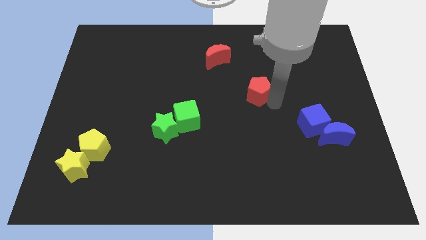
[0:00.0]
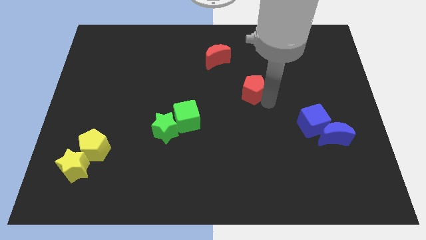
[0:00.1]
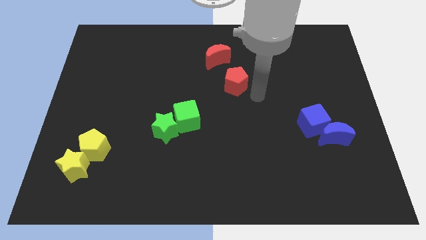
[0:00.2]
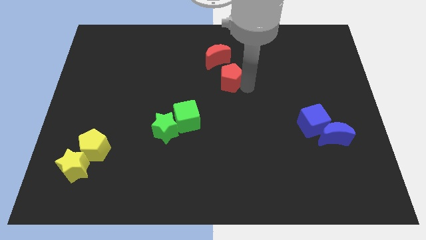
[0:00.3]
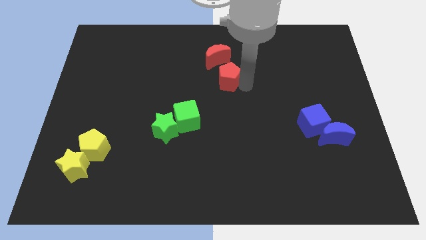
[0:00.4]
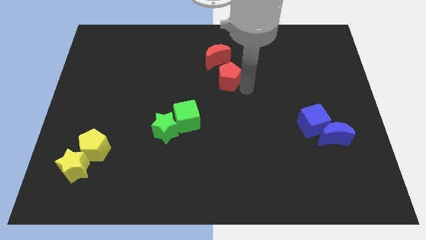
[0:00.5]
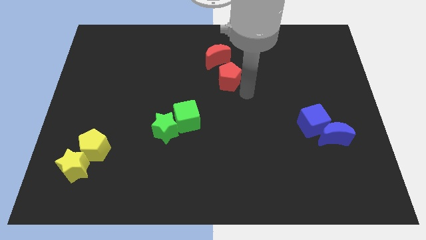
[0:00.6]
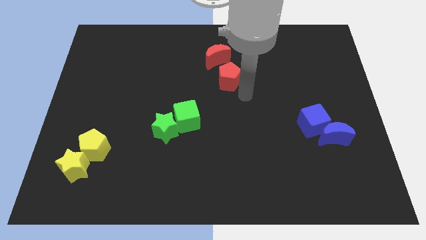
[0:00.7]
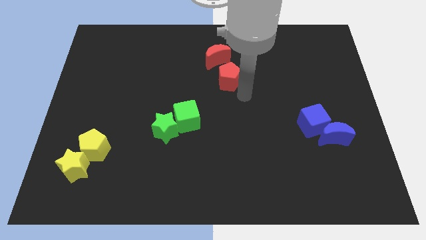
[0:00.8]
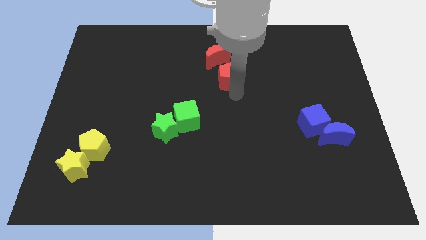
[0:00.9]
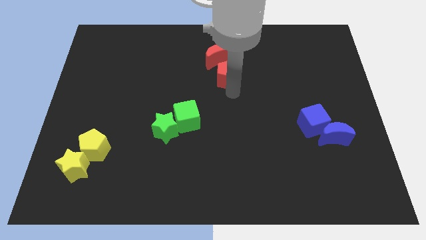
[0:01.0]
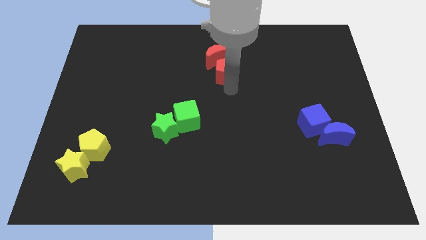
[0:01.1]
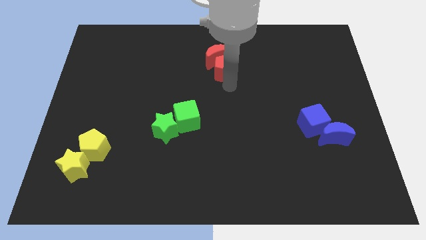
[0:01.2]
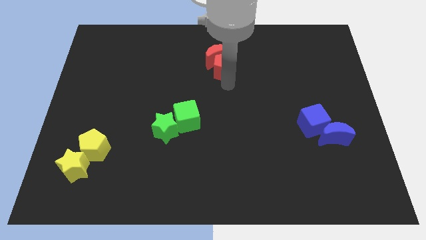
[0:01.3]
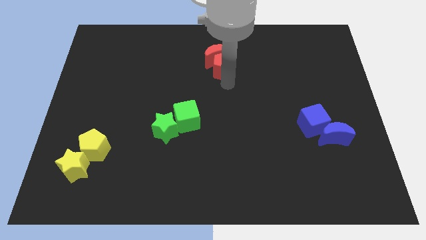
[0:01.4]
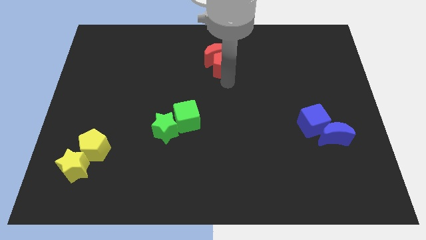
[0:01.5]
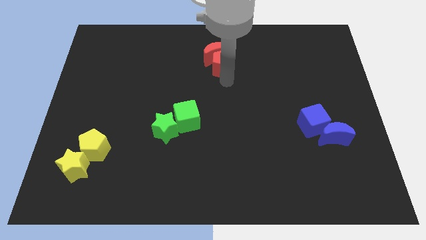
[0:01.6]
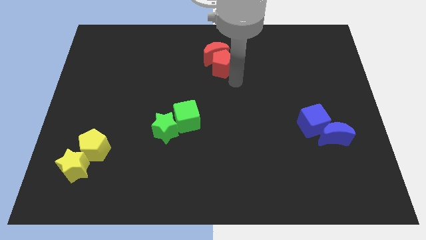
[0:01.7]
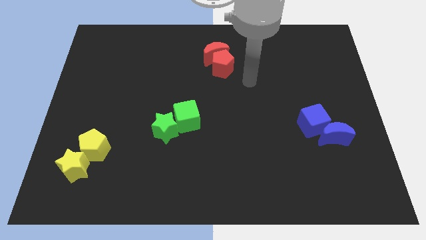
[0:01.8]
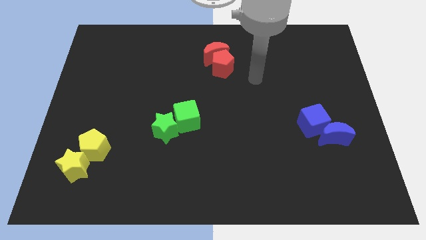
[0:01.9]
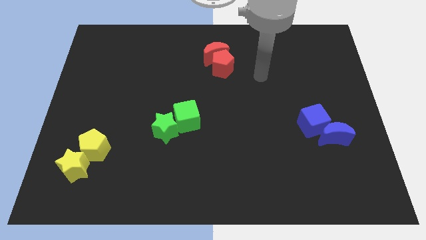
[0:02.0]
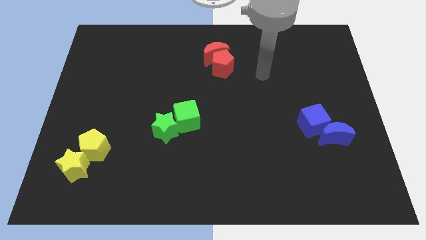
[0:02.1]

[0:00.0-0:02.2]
move your arm away from the red pentagon

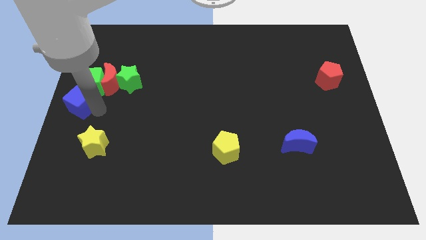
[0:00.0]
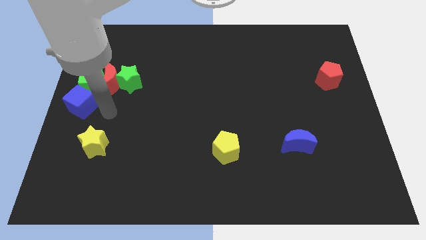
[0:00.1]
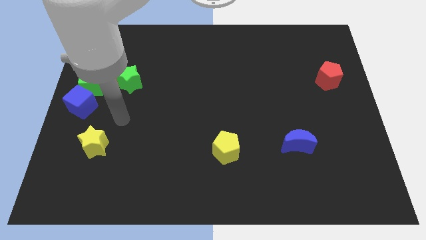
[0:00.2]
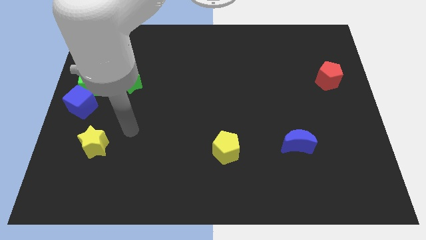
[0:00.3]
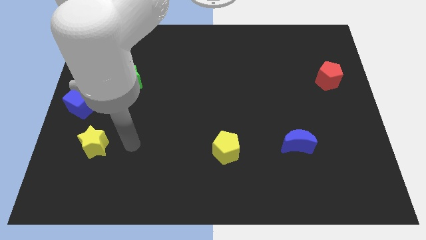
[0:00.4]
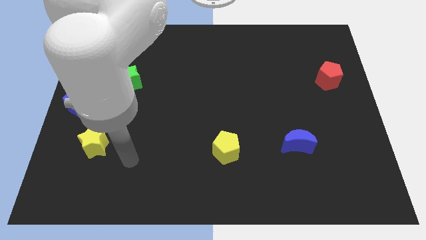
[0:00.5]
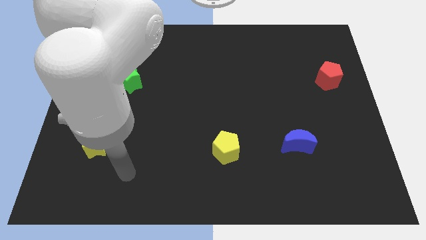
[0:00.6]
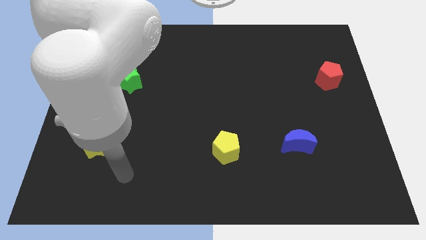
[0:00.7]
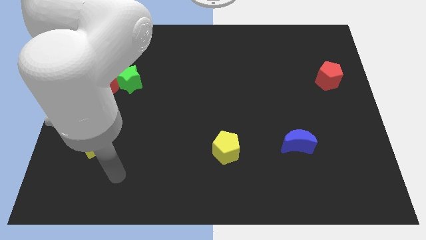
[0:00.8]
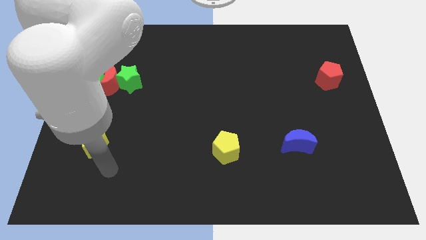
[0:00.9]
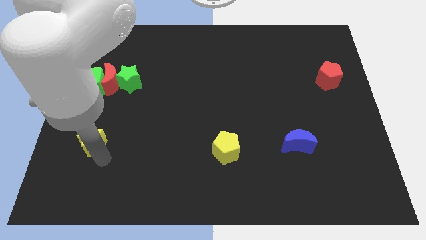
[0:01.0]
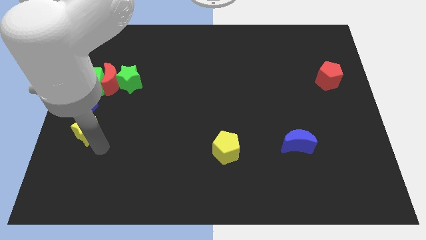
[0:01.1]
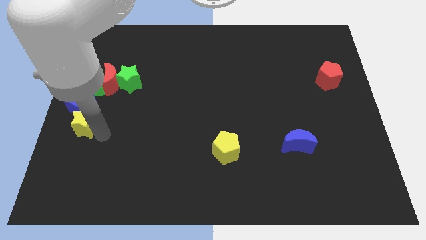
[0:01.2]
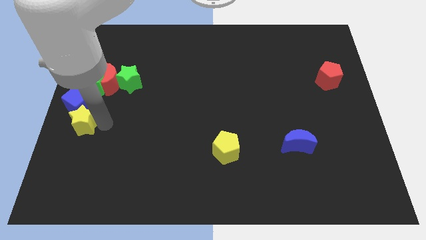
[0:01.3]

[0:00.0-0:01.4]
place the yellow star down to the blue cube

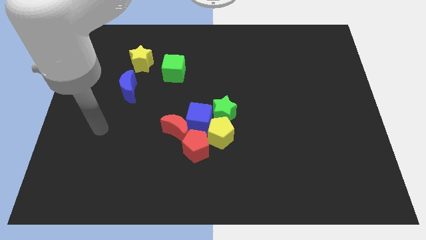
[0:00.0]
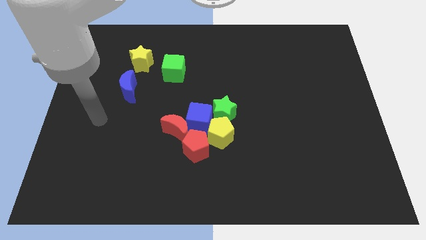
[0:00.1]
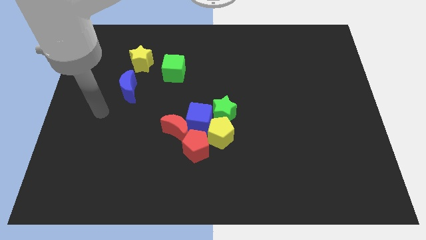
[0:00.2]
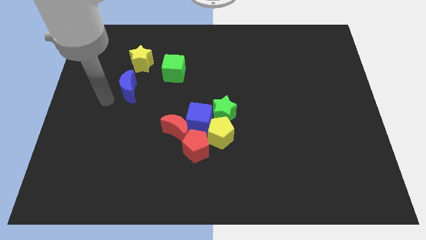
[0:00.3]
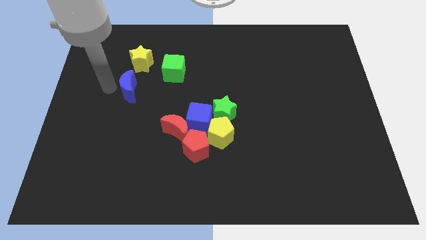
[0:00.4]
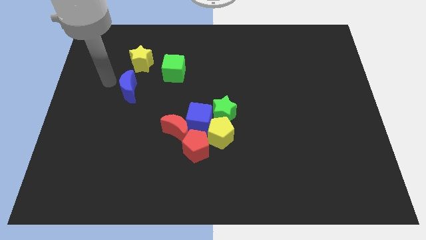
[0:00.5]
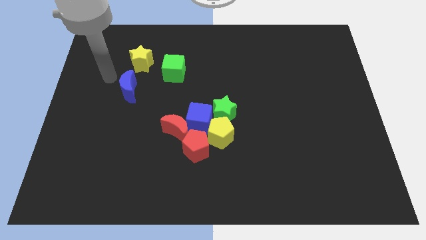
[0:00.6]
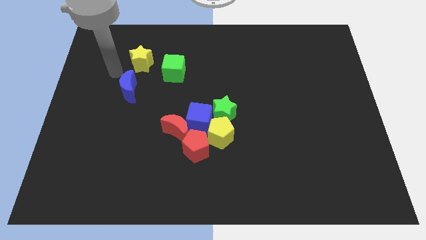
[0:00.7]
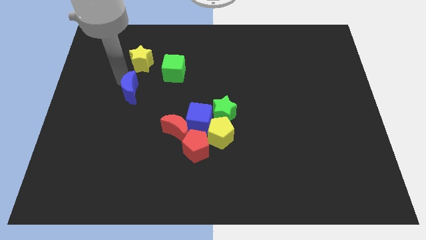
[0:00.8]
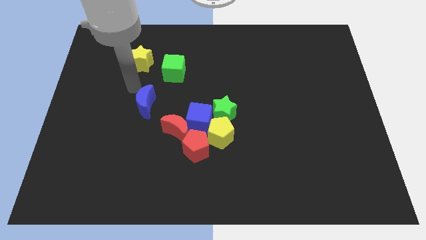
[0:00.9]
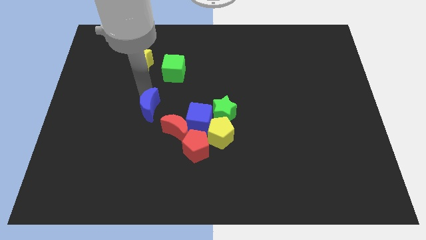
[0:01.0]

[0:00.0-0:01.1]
move the blue moon towards the red moon

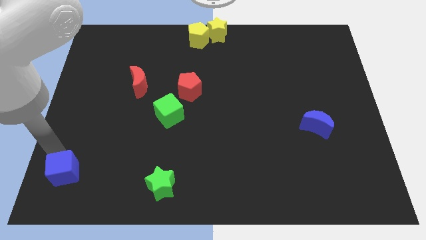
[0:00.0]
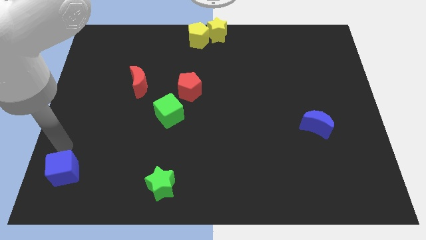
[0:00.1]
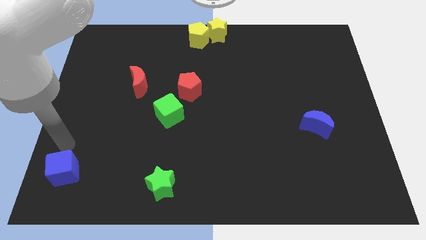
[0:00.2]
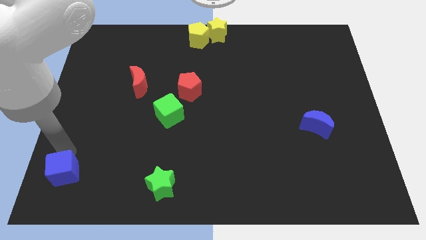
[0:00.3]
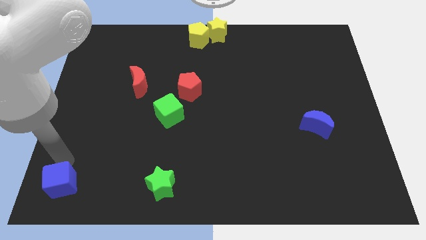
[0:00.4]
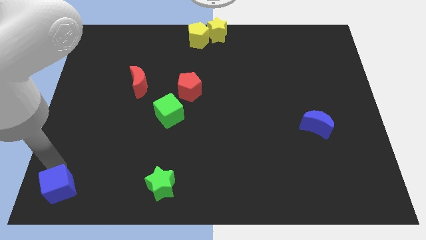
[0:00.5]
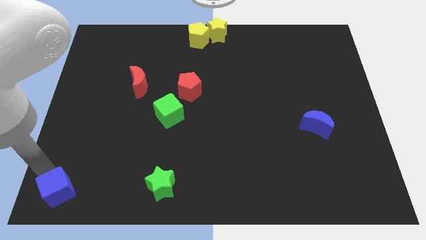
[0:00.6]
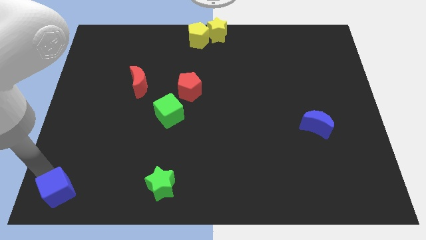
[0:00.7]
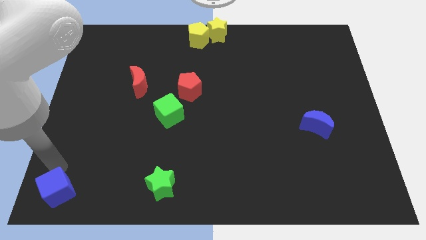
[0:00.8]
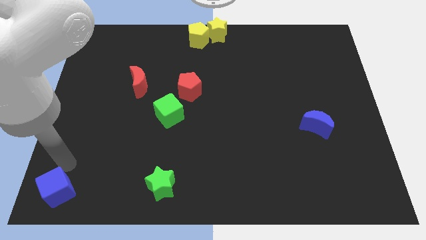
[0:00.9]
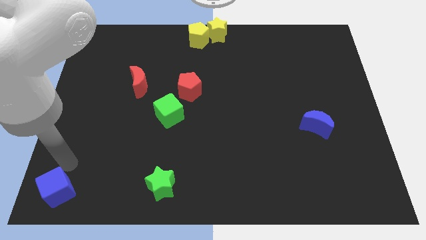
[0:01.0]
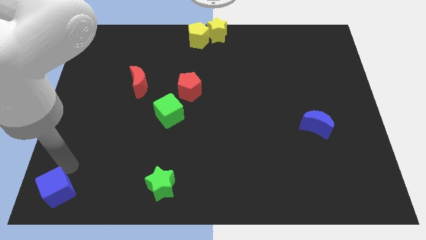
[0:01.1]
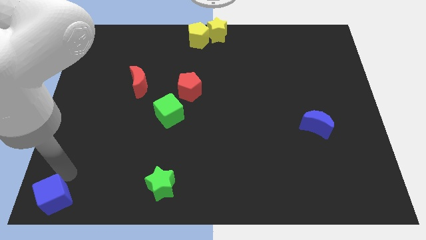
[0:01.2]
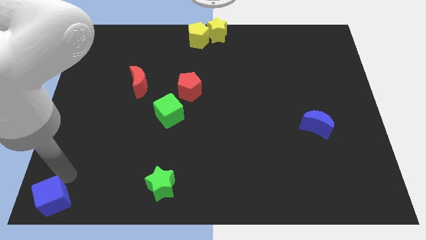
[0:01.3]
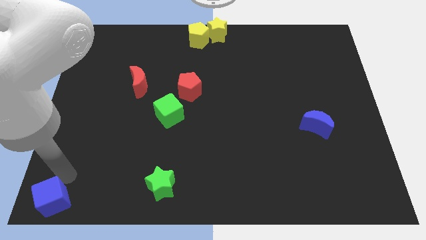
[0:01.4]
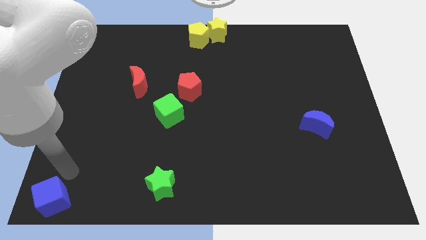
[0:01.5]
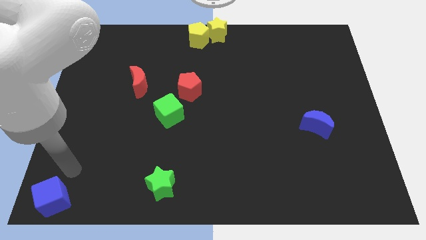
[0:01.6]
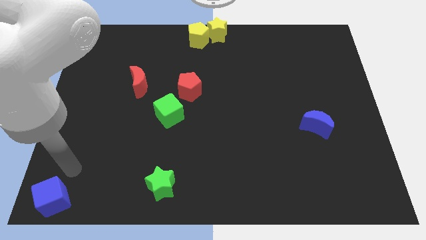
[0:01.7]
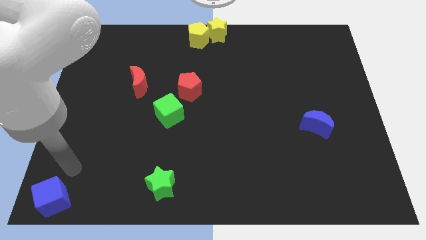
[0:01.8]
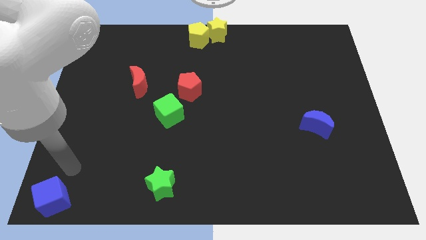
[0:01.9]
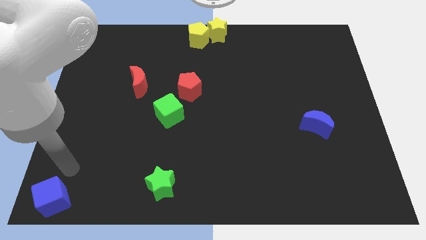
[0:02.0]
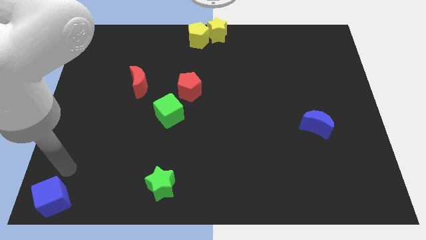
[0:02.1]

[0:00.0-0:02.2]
place the blue cube to the bottom left corner

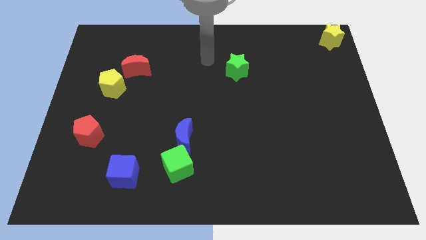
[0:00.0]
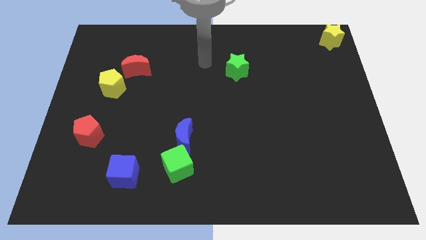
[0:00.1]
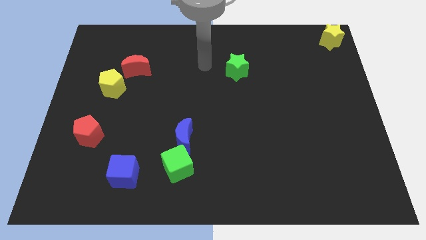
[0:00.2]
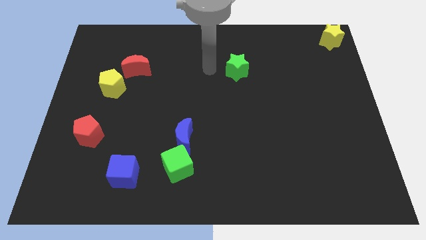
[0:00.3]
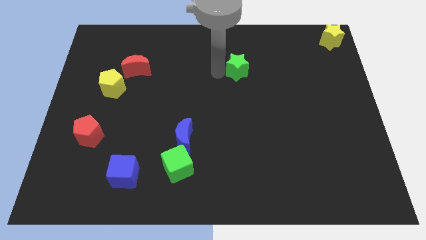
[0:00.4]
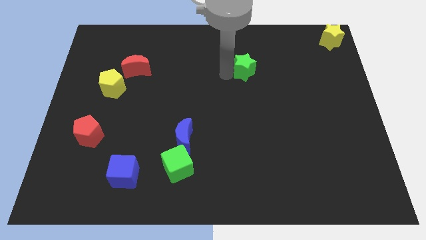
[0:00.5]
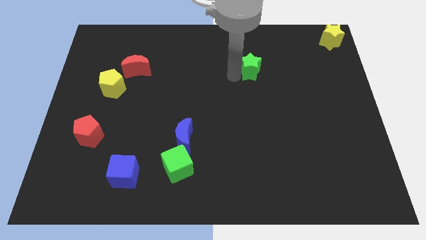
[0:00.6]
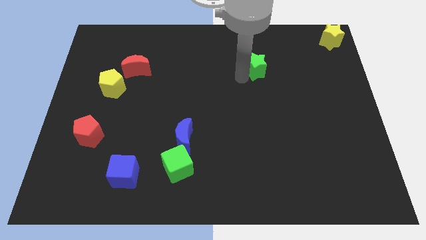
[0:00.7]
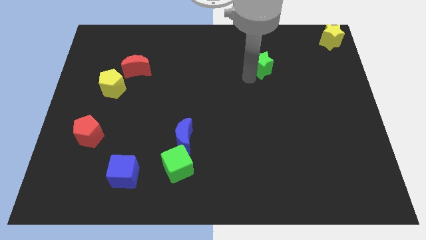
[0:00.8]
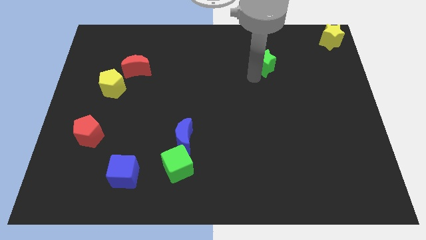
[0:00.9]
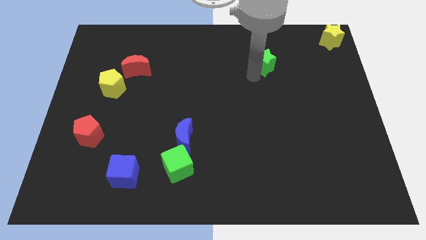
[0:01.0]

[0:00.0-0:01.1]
move green star slightly right

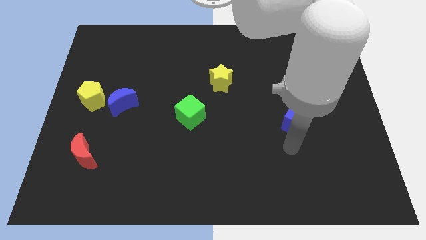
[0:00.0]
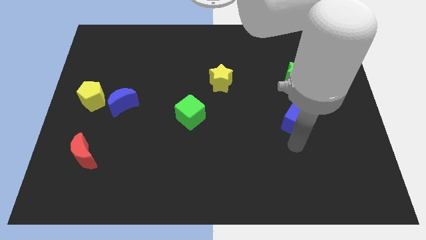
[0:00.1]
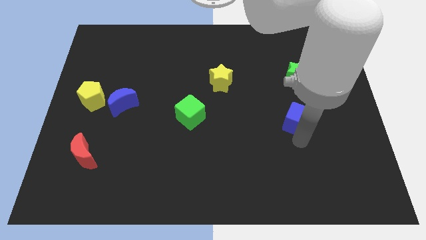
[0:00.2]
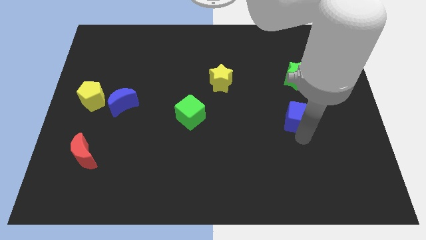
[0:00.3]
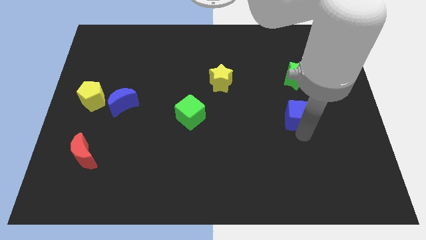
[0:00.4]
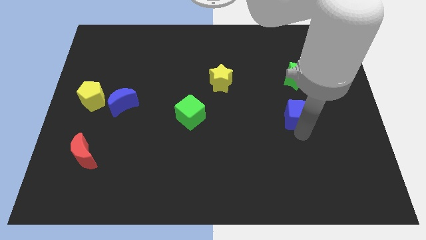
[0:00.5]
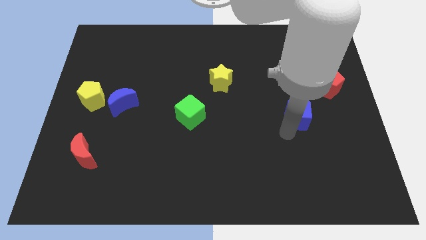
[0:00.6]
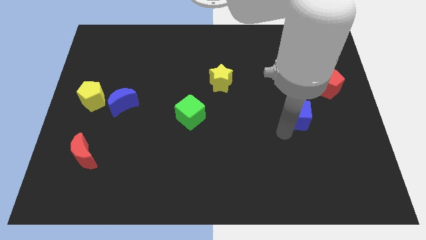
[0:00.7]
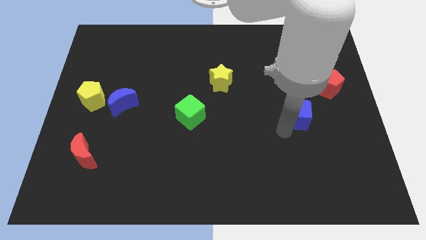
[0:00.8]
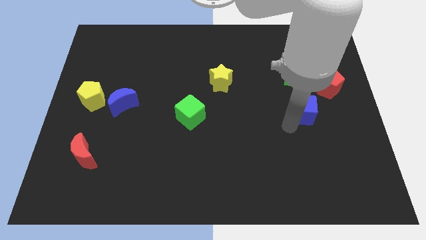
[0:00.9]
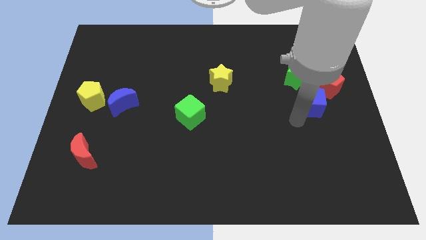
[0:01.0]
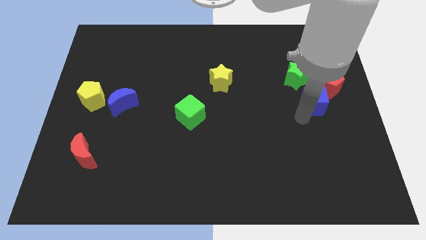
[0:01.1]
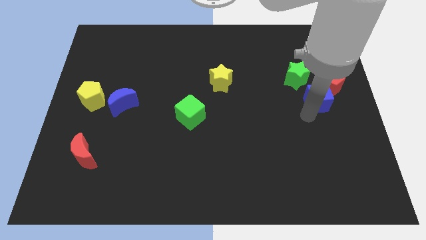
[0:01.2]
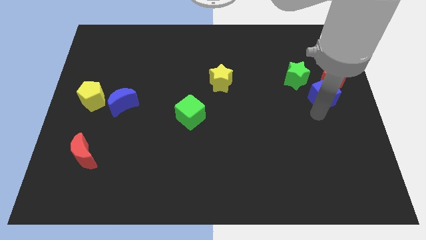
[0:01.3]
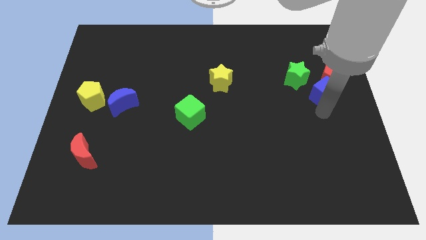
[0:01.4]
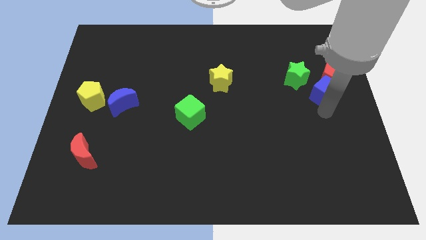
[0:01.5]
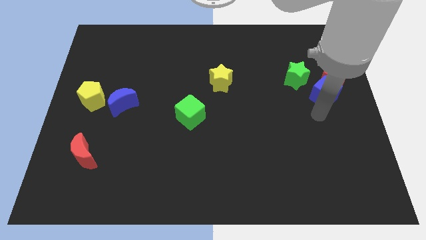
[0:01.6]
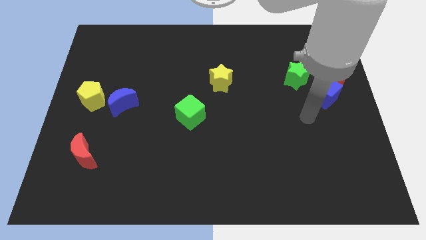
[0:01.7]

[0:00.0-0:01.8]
push the blue cube at the bottom of the red pentagon
